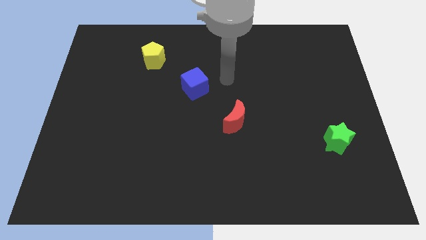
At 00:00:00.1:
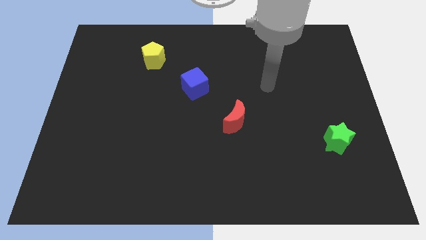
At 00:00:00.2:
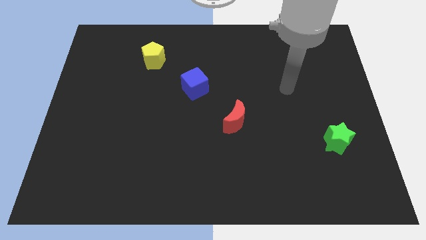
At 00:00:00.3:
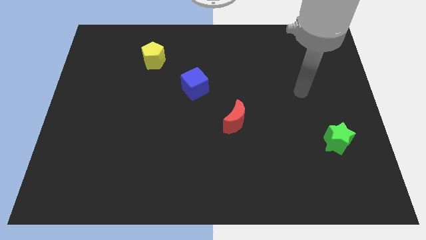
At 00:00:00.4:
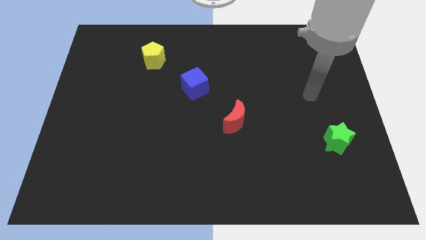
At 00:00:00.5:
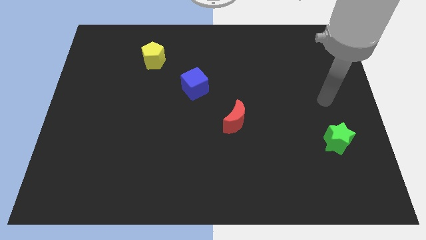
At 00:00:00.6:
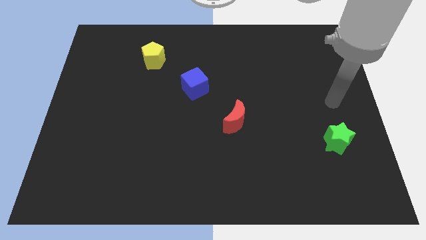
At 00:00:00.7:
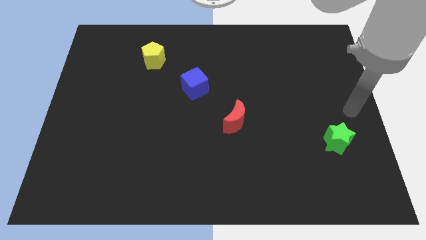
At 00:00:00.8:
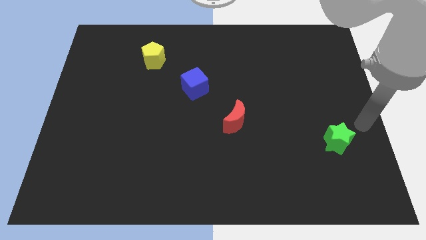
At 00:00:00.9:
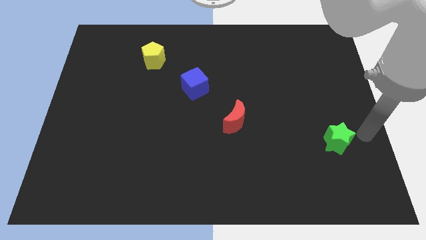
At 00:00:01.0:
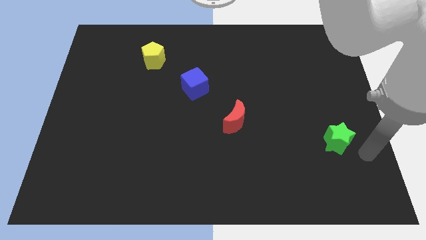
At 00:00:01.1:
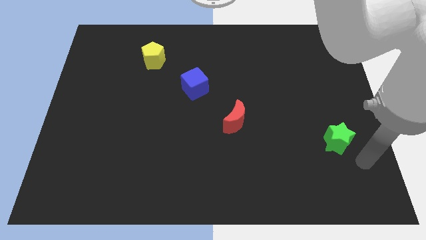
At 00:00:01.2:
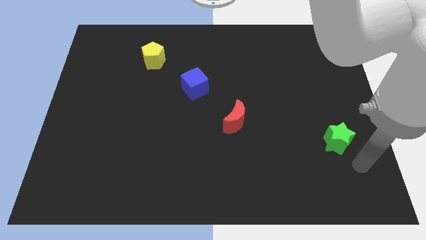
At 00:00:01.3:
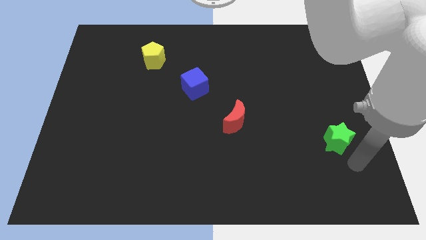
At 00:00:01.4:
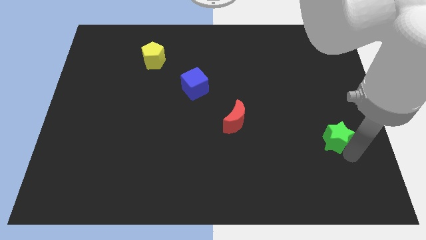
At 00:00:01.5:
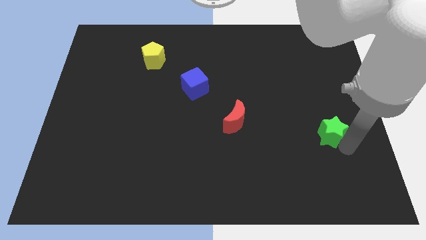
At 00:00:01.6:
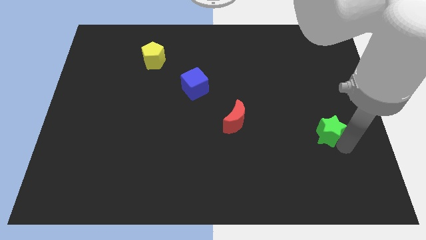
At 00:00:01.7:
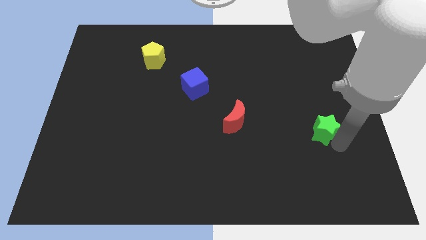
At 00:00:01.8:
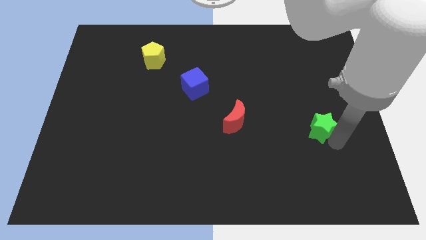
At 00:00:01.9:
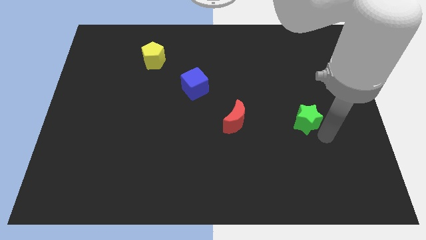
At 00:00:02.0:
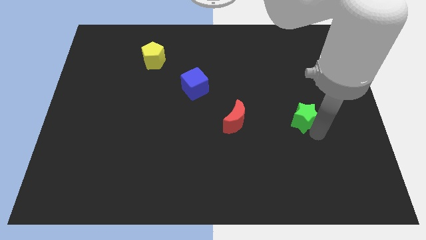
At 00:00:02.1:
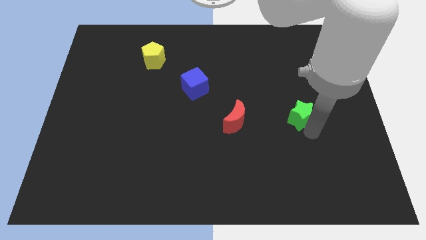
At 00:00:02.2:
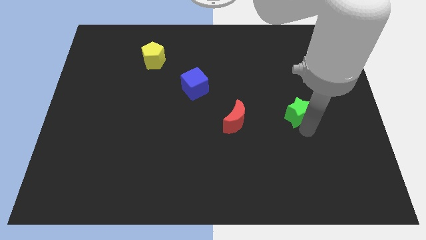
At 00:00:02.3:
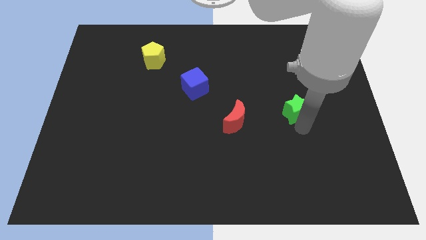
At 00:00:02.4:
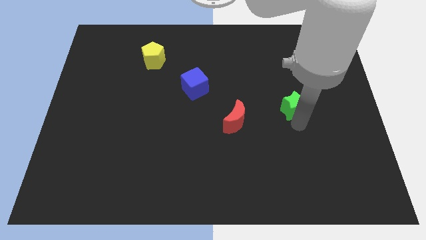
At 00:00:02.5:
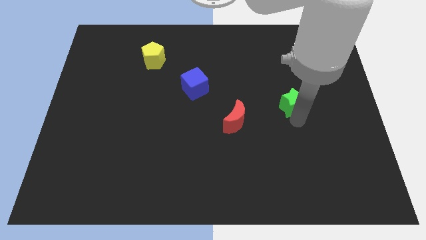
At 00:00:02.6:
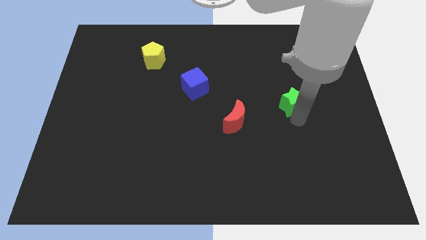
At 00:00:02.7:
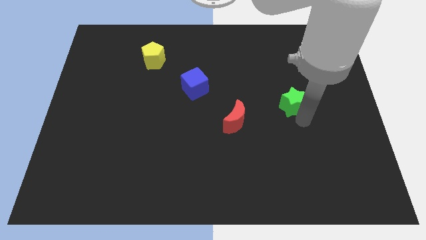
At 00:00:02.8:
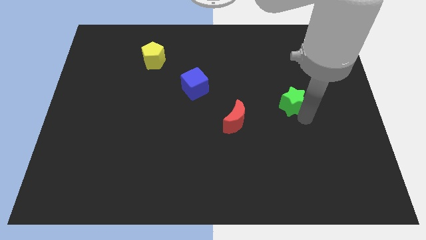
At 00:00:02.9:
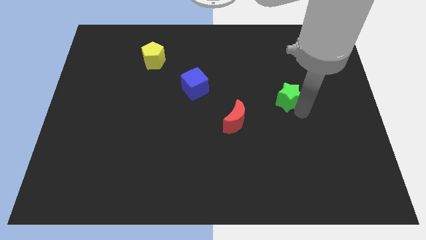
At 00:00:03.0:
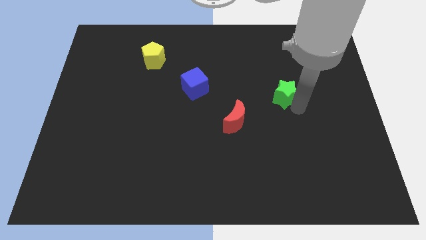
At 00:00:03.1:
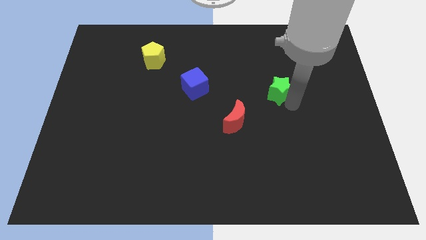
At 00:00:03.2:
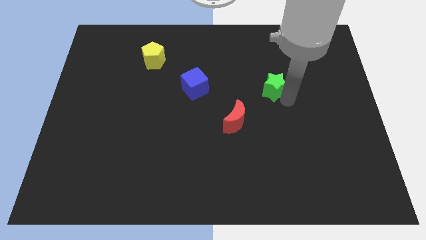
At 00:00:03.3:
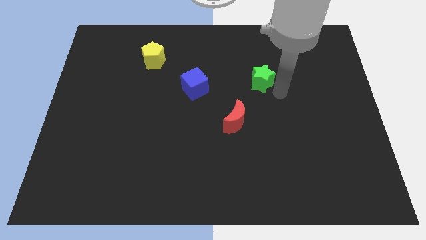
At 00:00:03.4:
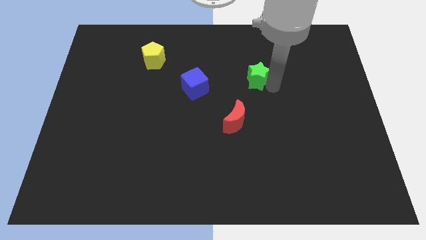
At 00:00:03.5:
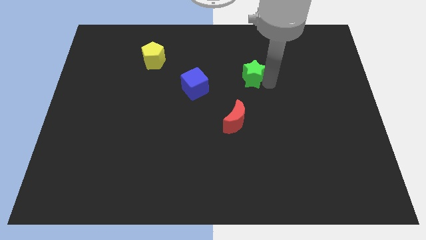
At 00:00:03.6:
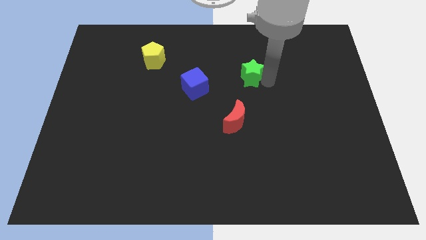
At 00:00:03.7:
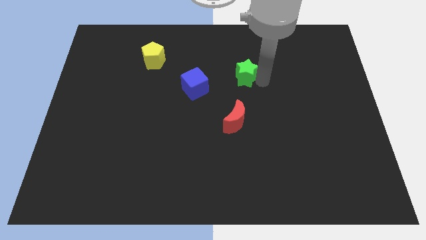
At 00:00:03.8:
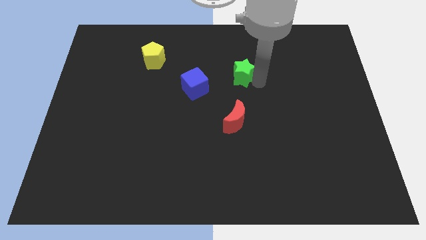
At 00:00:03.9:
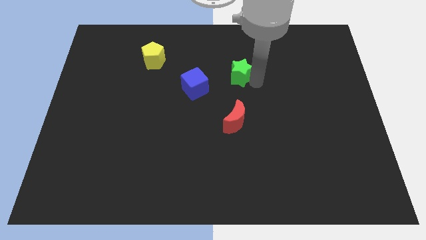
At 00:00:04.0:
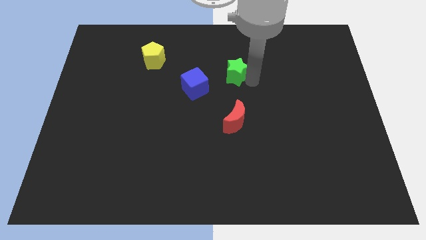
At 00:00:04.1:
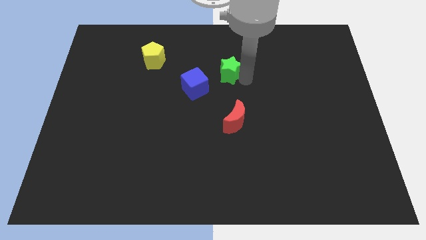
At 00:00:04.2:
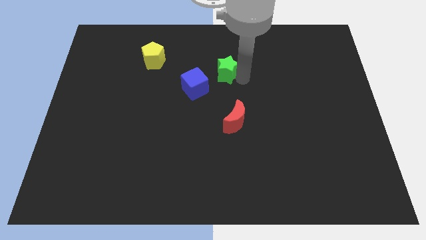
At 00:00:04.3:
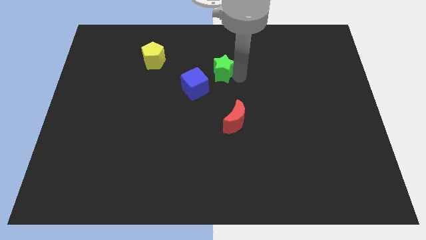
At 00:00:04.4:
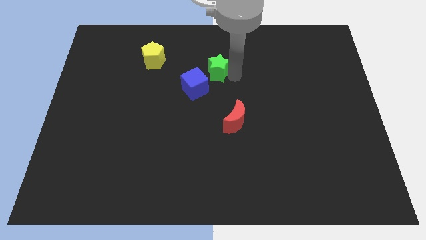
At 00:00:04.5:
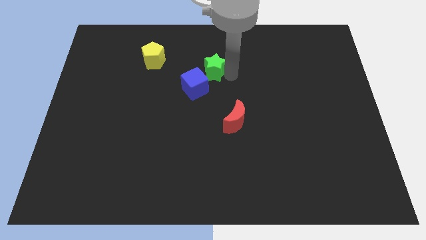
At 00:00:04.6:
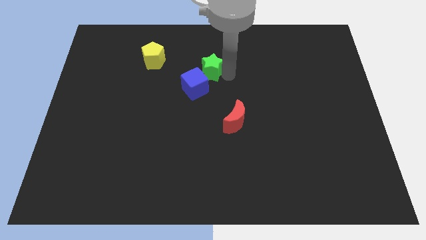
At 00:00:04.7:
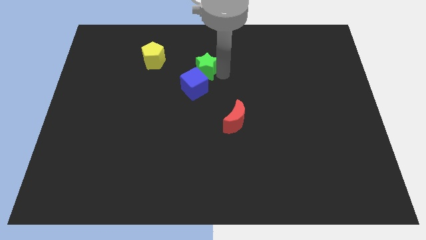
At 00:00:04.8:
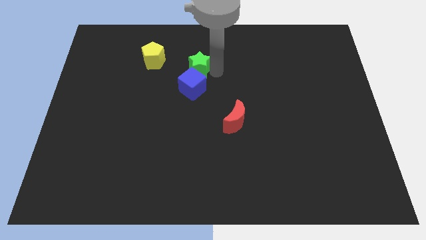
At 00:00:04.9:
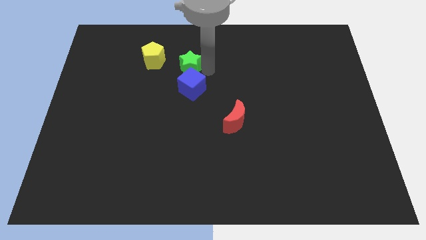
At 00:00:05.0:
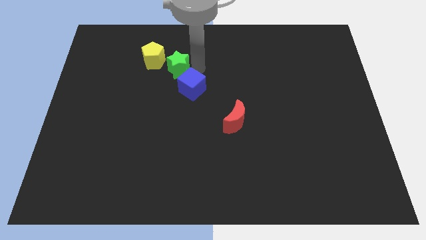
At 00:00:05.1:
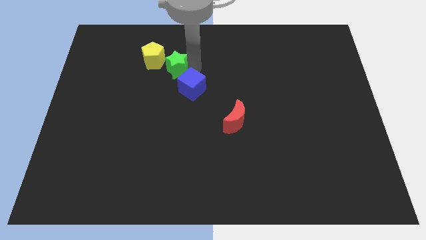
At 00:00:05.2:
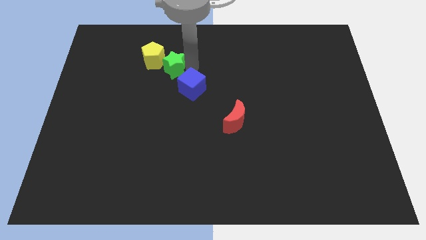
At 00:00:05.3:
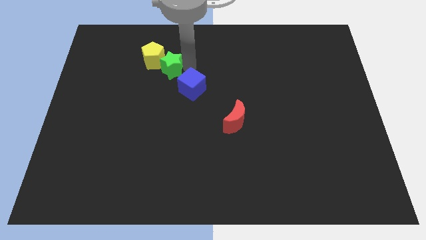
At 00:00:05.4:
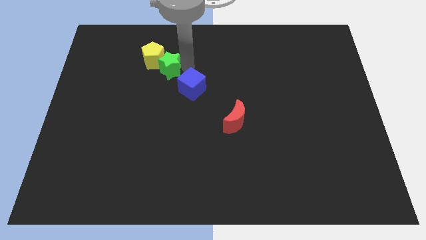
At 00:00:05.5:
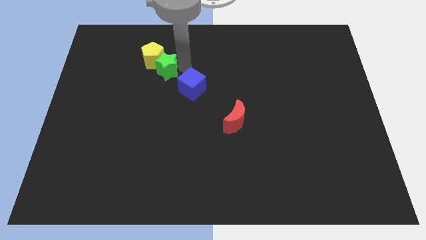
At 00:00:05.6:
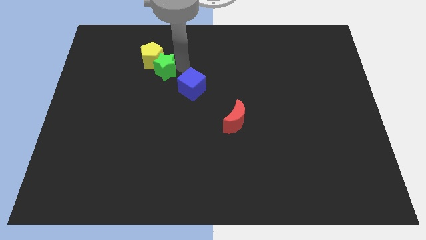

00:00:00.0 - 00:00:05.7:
push the star to the yellow pentagon

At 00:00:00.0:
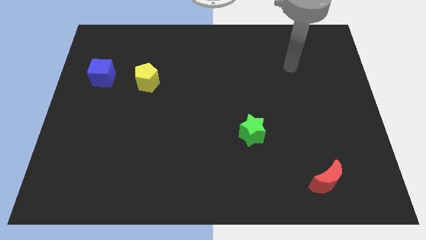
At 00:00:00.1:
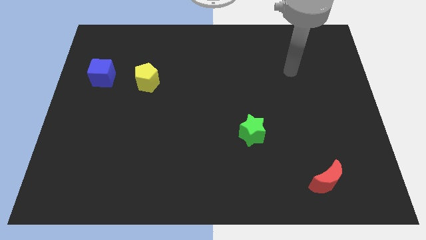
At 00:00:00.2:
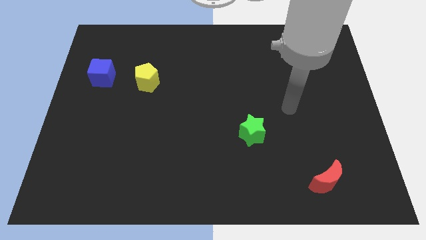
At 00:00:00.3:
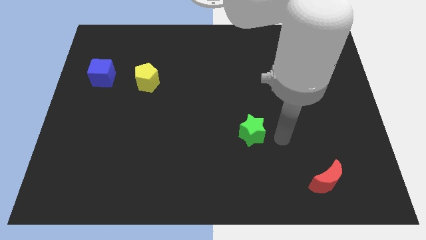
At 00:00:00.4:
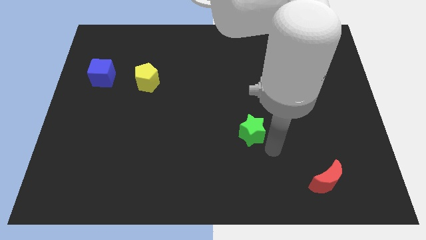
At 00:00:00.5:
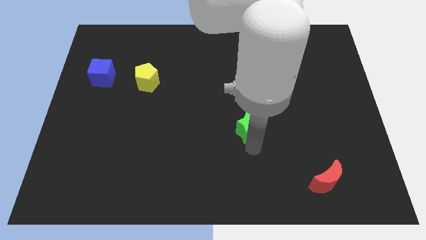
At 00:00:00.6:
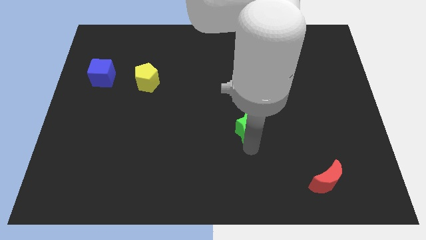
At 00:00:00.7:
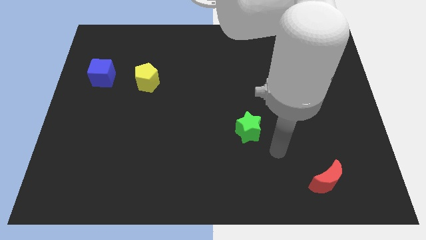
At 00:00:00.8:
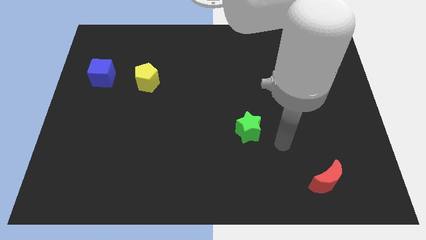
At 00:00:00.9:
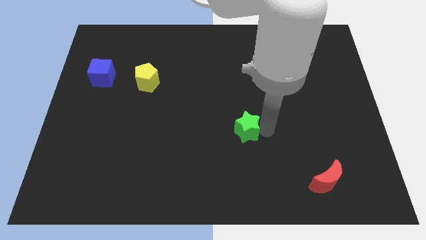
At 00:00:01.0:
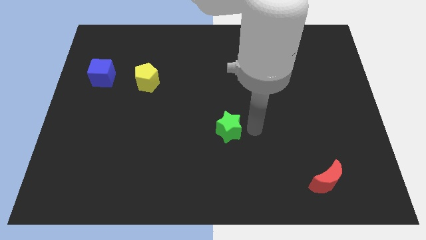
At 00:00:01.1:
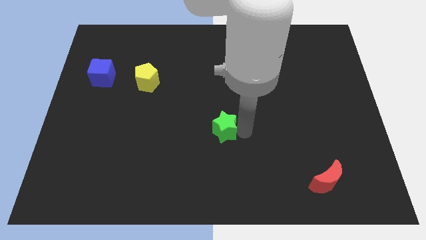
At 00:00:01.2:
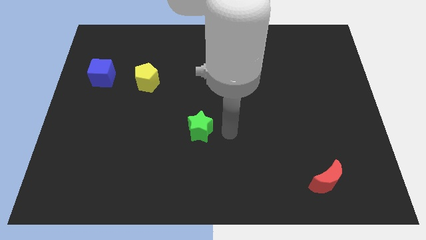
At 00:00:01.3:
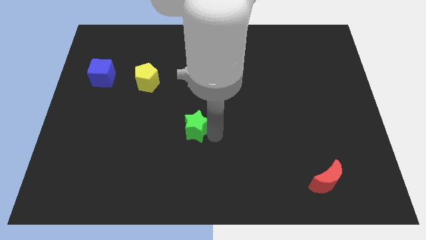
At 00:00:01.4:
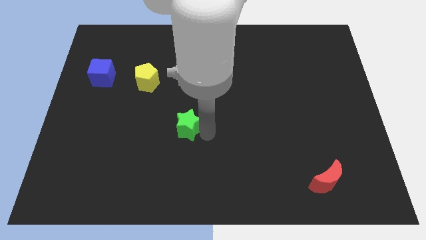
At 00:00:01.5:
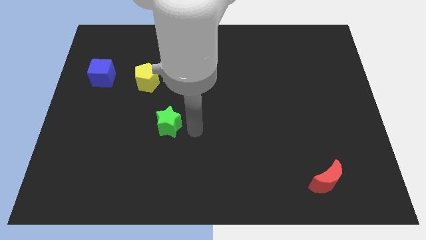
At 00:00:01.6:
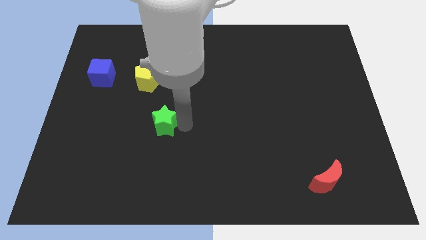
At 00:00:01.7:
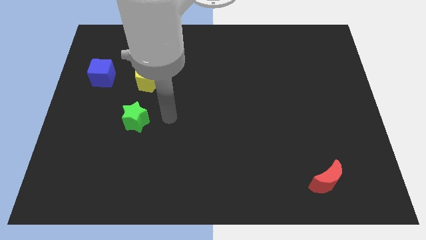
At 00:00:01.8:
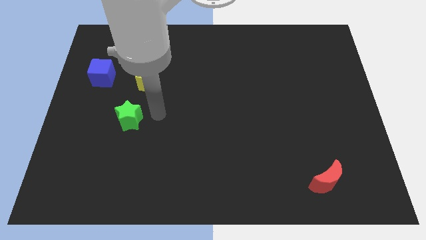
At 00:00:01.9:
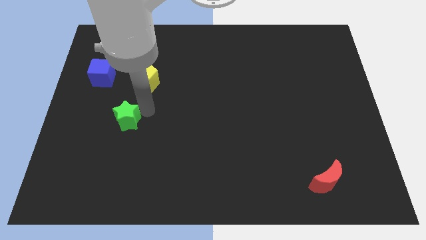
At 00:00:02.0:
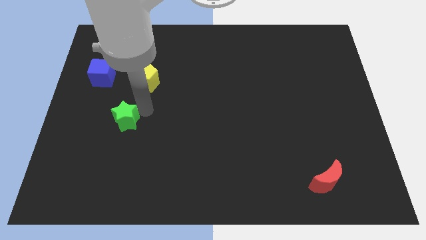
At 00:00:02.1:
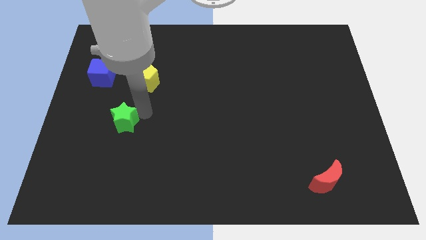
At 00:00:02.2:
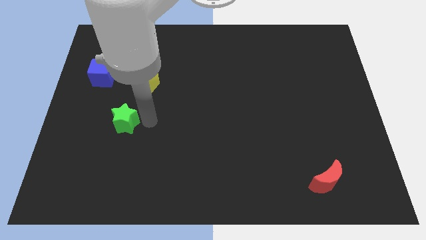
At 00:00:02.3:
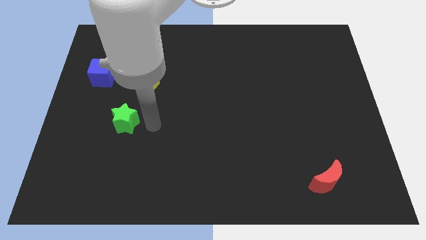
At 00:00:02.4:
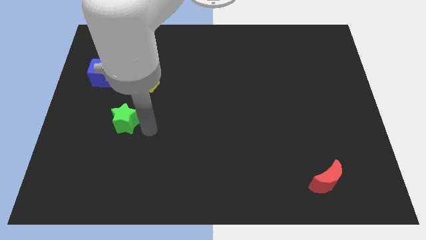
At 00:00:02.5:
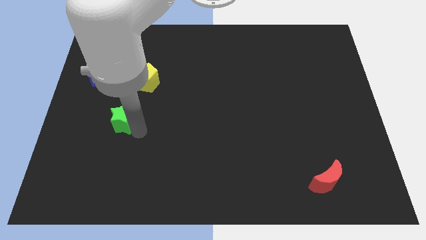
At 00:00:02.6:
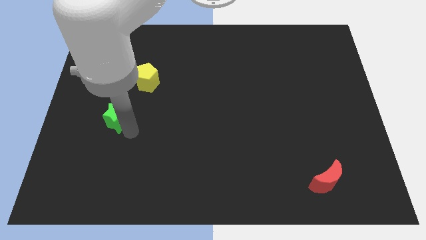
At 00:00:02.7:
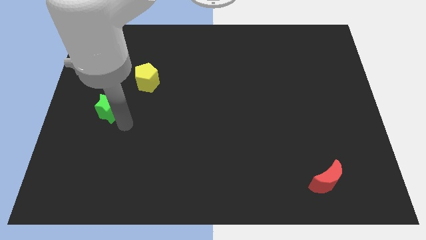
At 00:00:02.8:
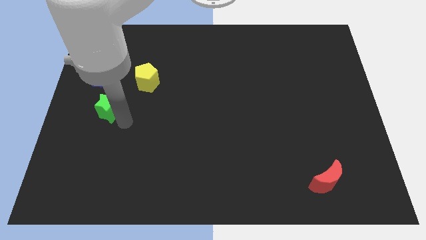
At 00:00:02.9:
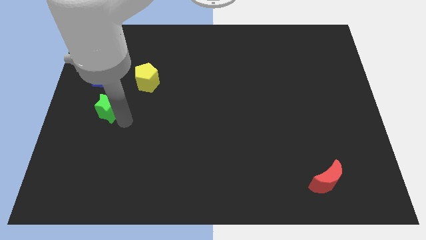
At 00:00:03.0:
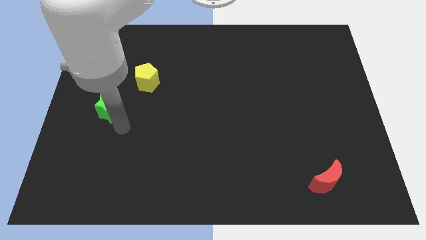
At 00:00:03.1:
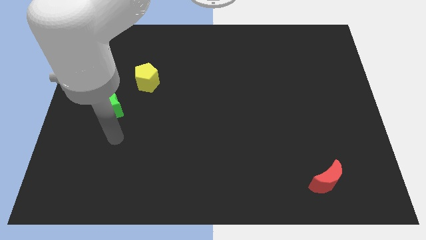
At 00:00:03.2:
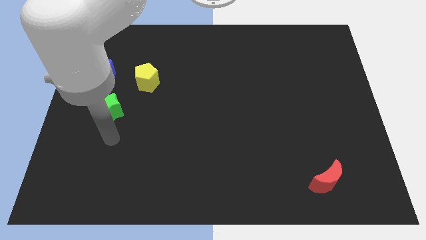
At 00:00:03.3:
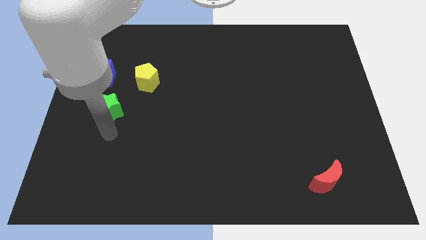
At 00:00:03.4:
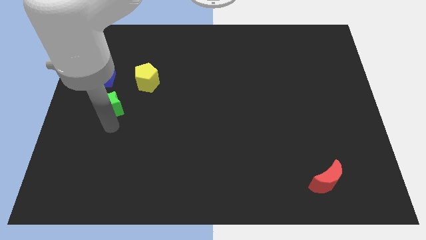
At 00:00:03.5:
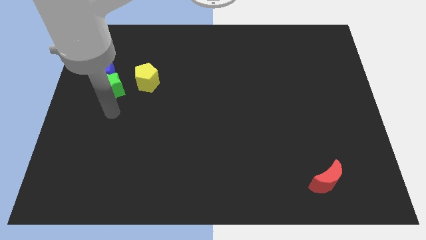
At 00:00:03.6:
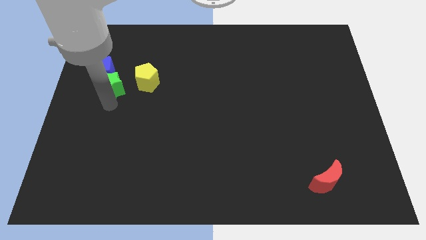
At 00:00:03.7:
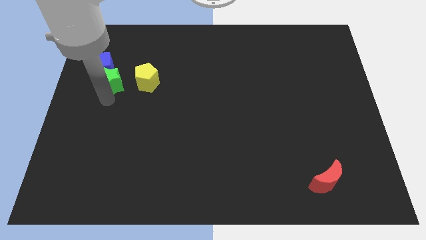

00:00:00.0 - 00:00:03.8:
put the star to the blue block
